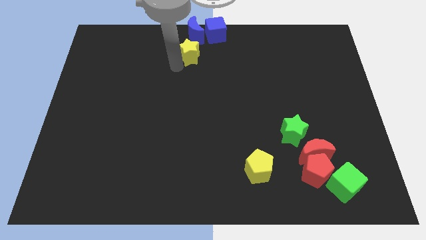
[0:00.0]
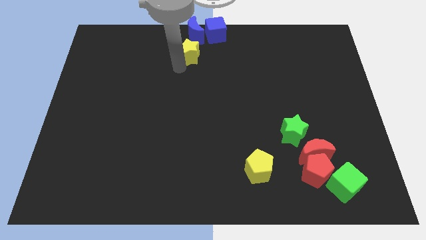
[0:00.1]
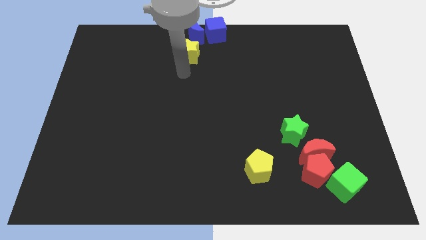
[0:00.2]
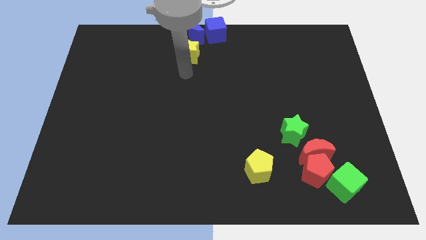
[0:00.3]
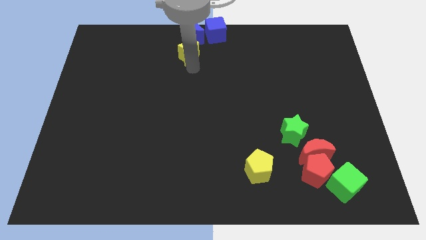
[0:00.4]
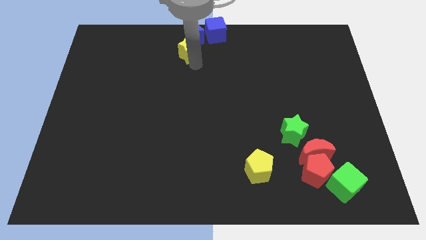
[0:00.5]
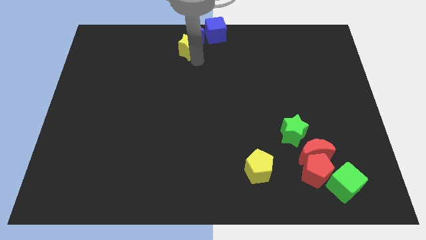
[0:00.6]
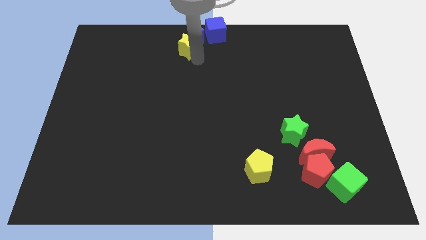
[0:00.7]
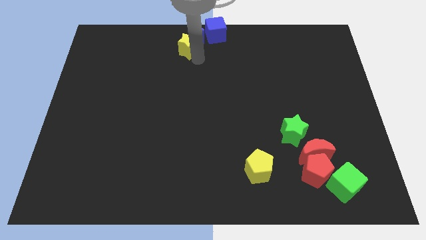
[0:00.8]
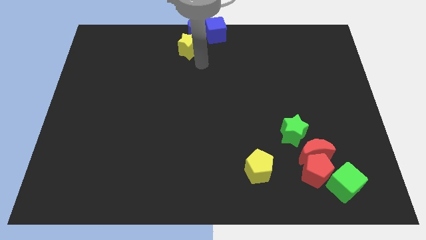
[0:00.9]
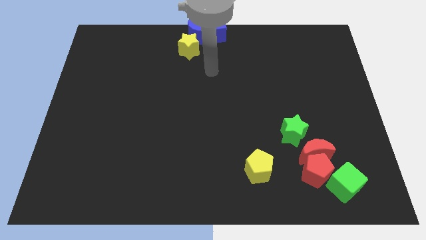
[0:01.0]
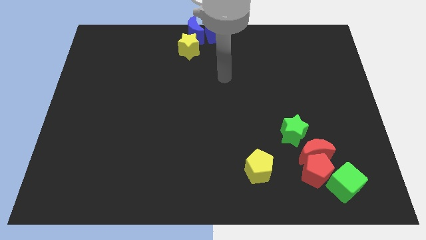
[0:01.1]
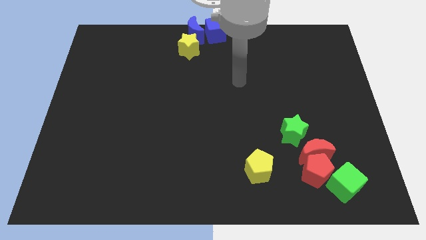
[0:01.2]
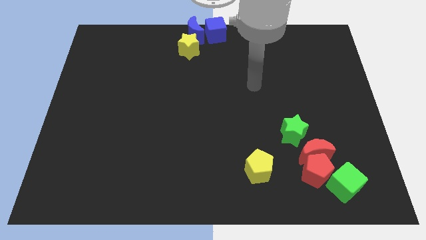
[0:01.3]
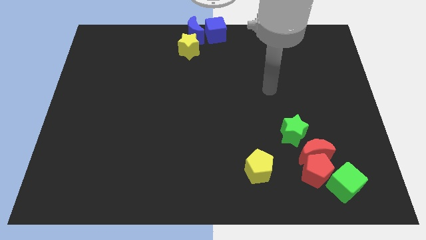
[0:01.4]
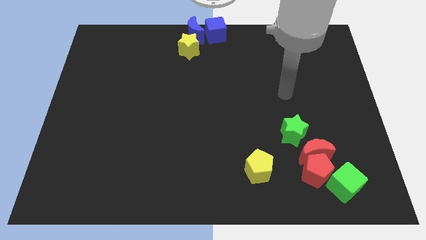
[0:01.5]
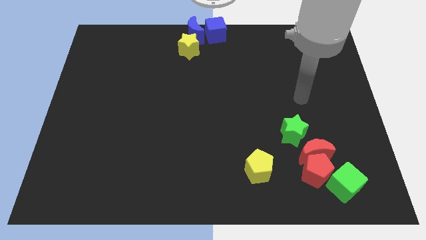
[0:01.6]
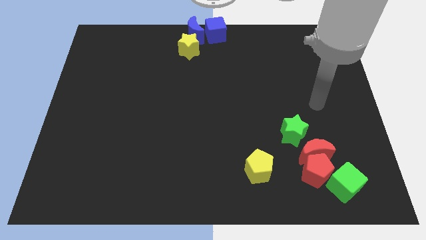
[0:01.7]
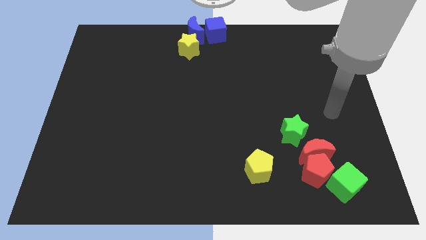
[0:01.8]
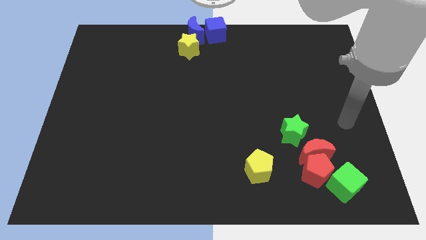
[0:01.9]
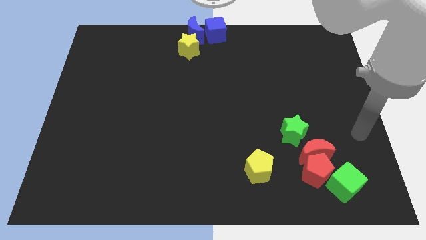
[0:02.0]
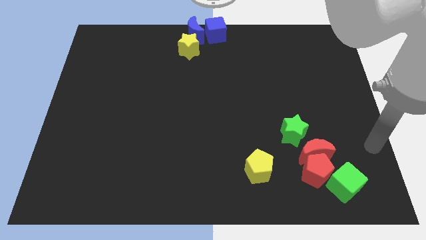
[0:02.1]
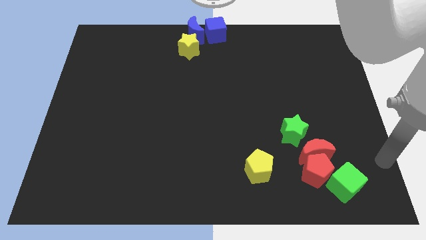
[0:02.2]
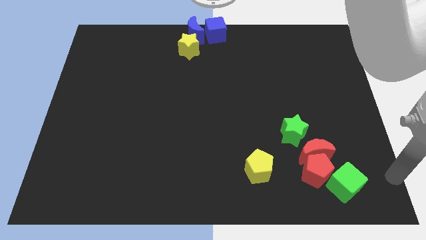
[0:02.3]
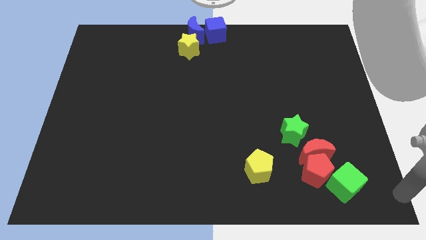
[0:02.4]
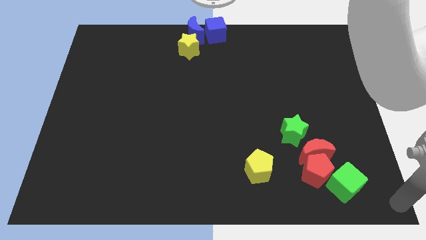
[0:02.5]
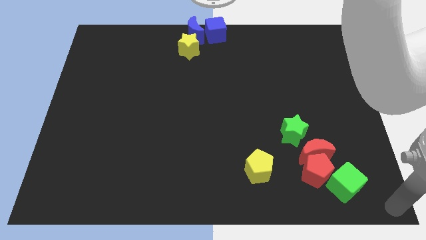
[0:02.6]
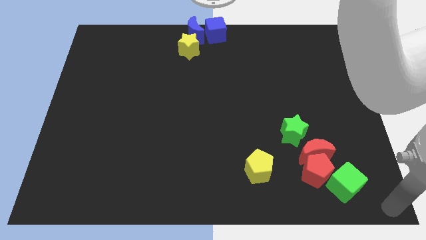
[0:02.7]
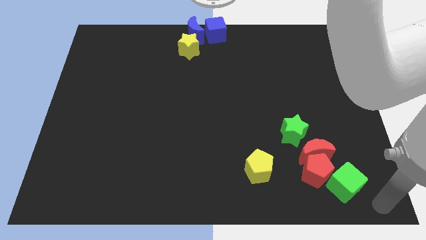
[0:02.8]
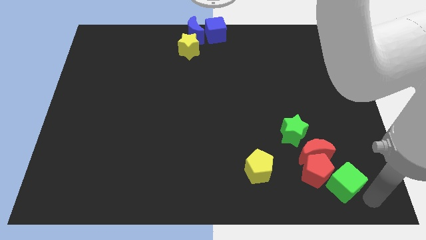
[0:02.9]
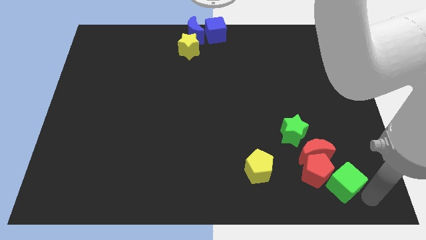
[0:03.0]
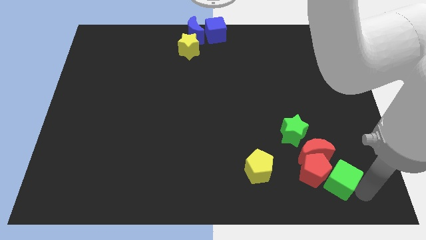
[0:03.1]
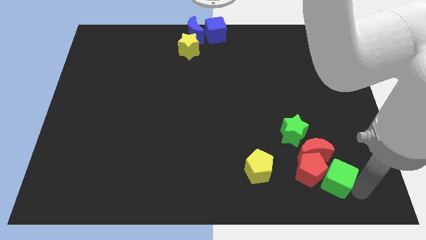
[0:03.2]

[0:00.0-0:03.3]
slightly push the green cube into the red pentagon

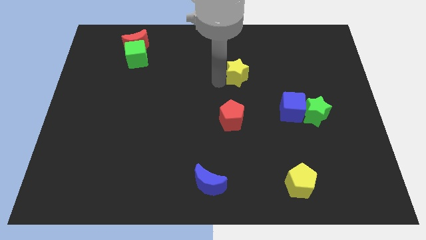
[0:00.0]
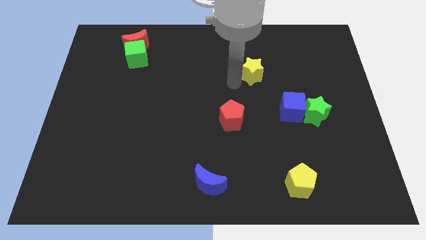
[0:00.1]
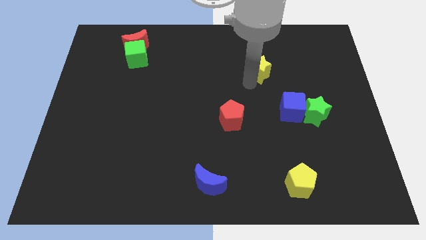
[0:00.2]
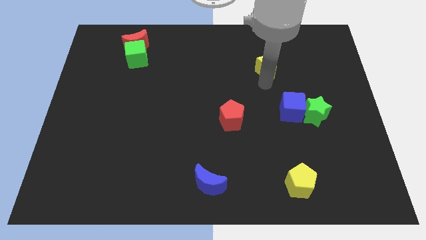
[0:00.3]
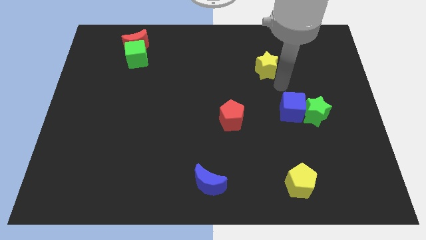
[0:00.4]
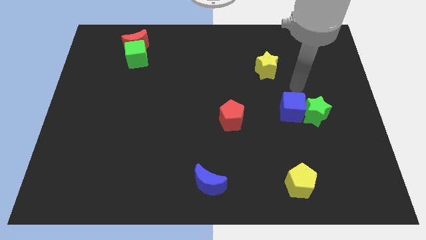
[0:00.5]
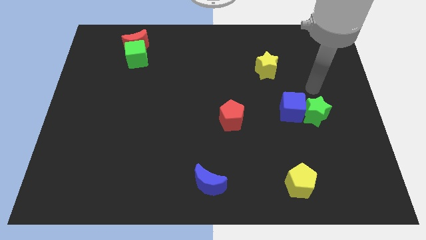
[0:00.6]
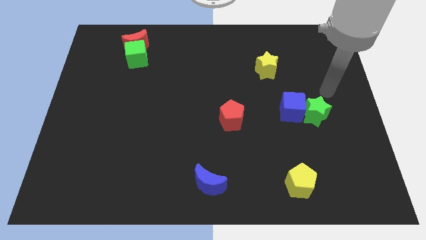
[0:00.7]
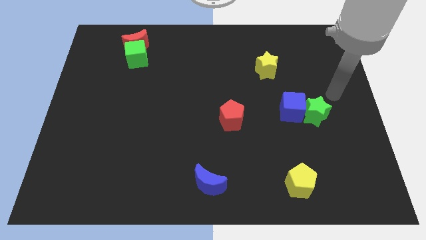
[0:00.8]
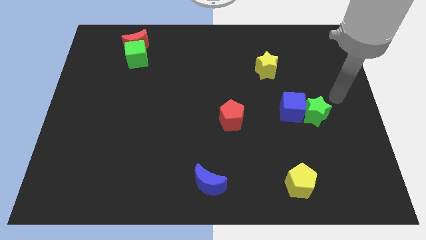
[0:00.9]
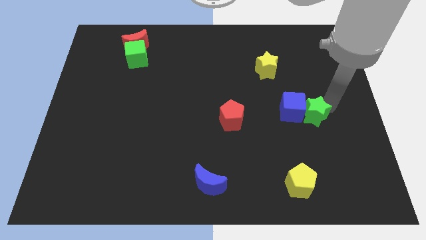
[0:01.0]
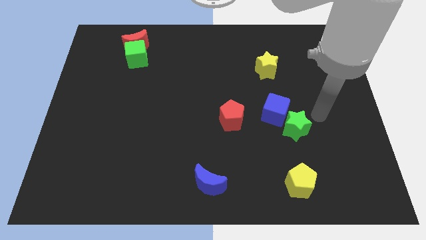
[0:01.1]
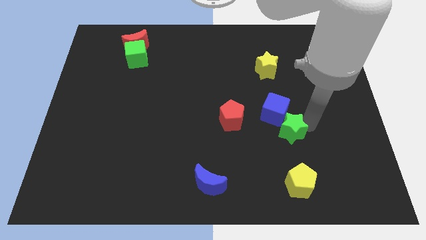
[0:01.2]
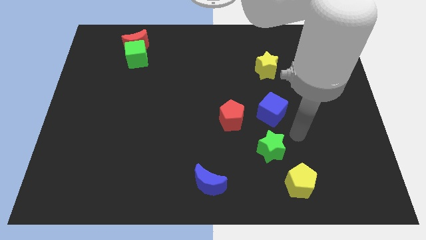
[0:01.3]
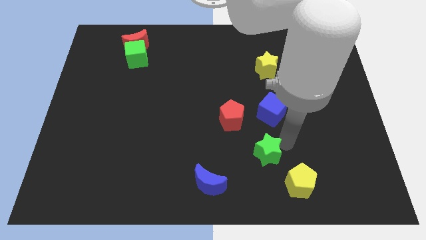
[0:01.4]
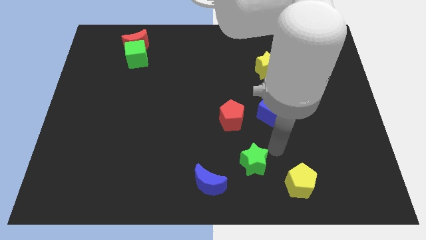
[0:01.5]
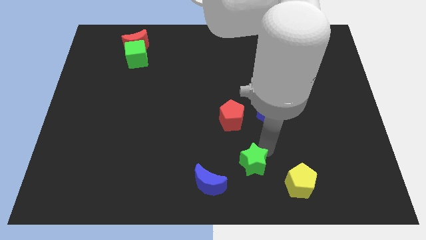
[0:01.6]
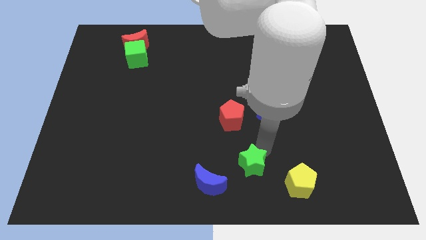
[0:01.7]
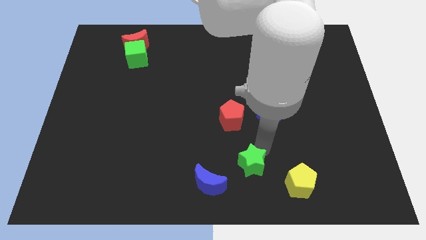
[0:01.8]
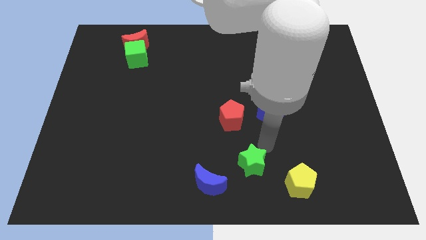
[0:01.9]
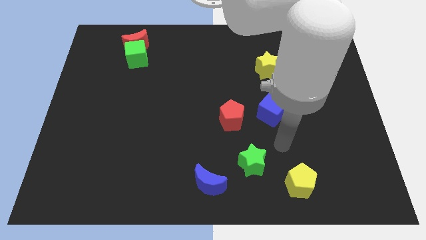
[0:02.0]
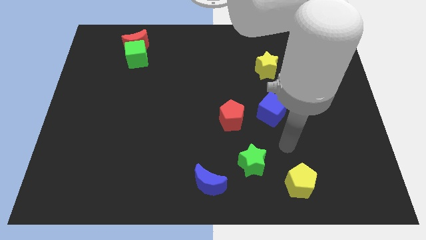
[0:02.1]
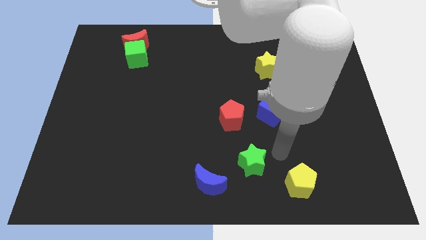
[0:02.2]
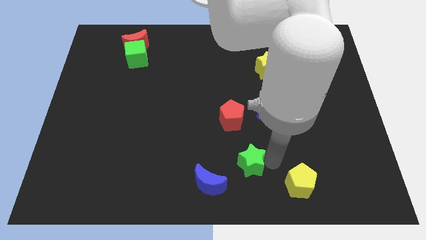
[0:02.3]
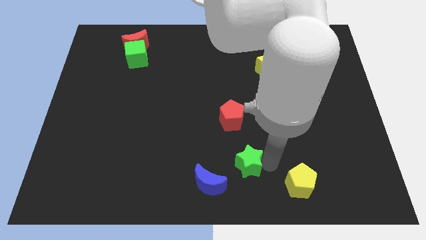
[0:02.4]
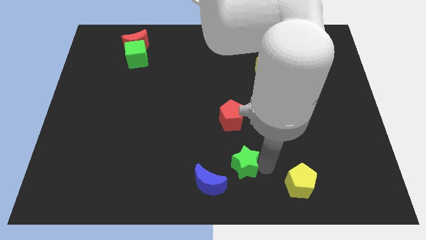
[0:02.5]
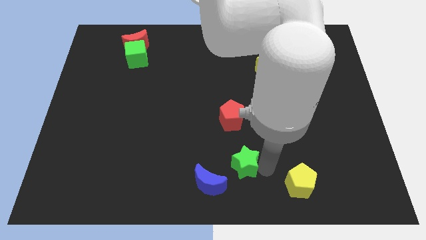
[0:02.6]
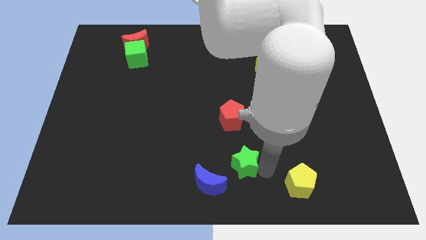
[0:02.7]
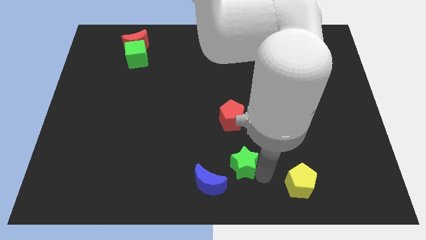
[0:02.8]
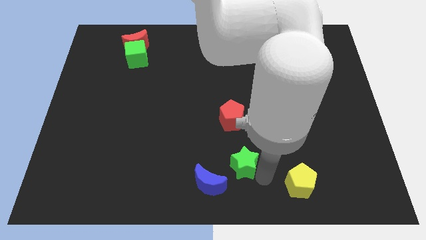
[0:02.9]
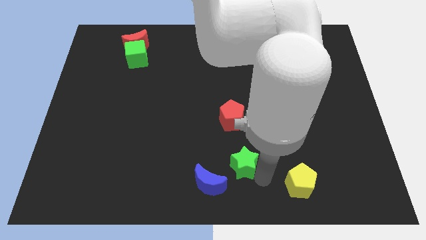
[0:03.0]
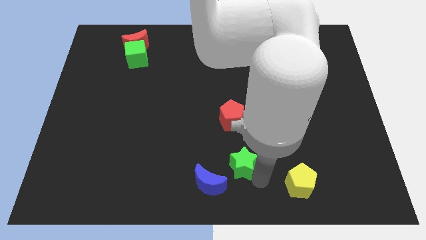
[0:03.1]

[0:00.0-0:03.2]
push the green star towards the blue crescent

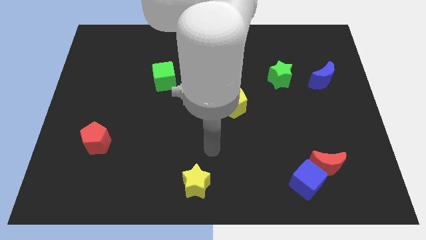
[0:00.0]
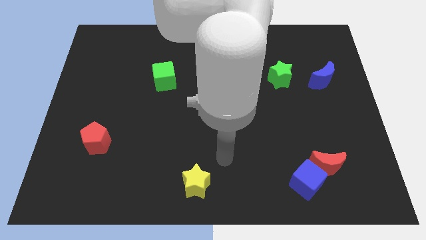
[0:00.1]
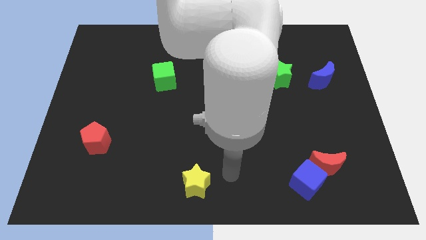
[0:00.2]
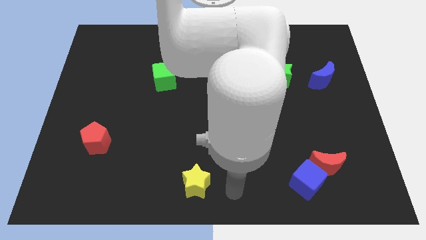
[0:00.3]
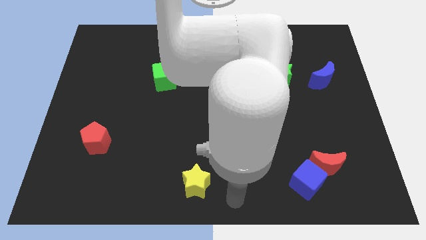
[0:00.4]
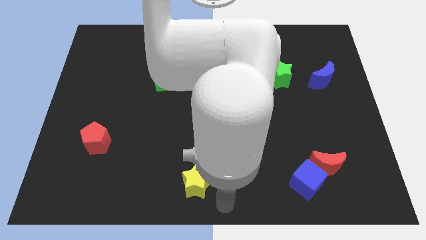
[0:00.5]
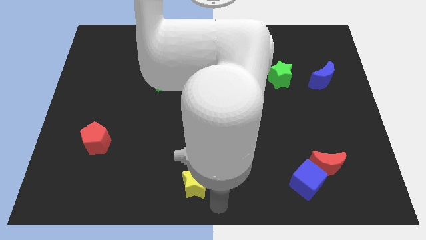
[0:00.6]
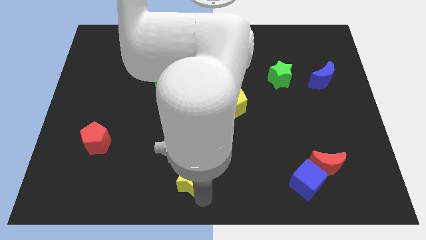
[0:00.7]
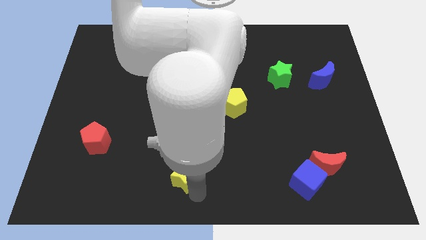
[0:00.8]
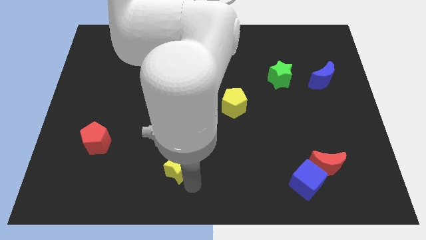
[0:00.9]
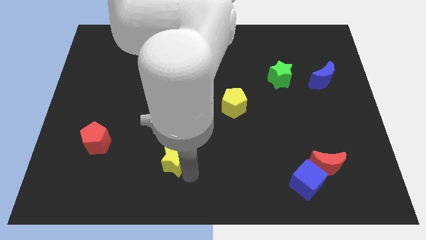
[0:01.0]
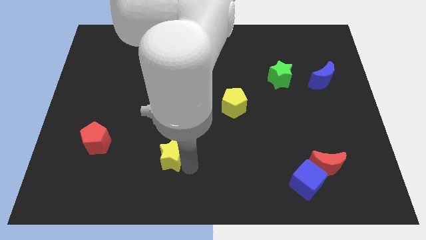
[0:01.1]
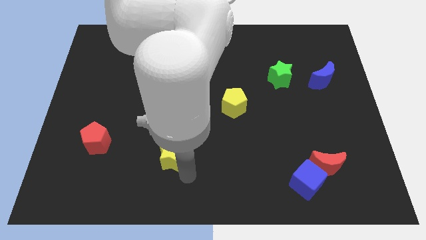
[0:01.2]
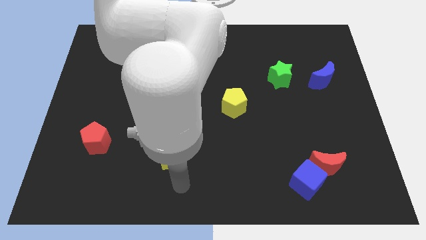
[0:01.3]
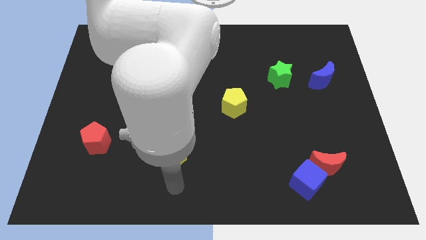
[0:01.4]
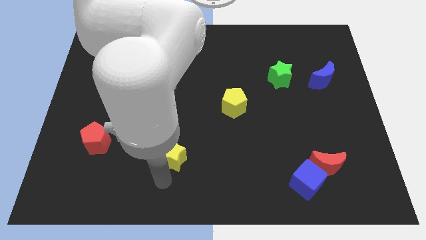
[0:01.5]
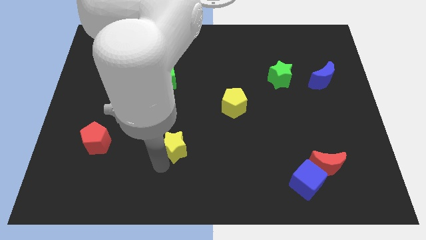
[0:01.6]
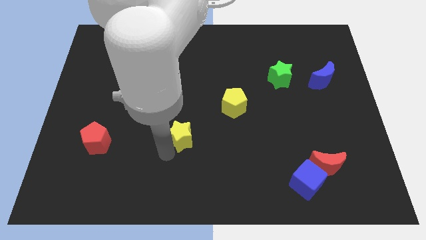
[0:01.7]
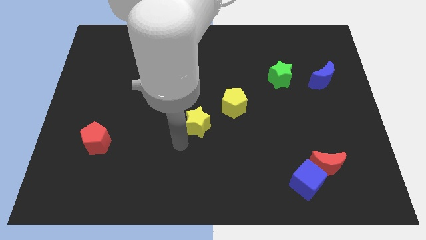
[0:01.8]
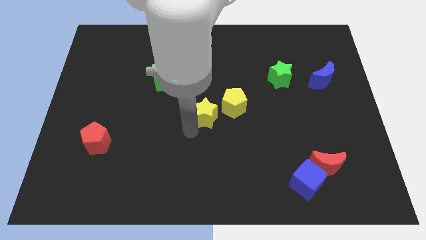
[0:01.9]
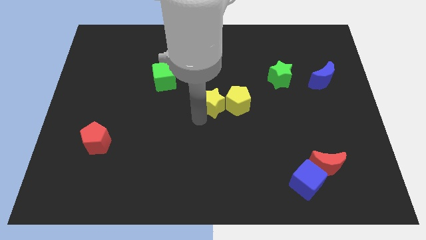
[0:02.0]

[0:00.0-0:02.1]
move the yellow star towards center of the board

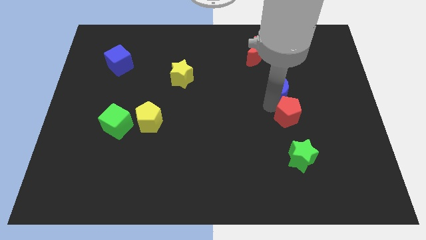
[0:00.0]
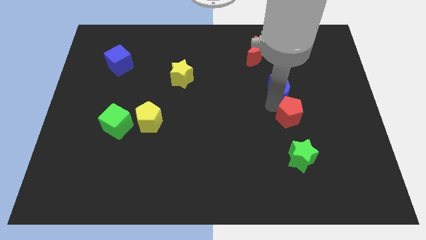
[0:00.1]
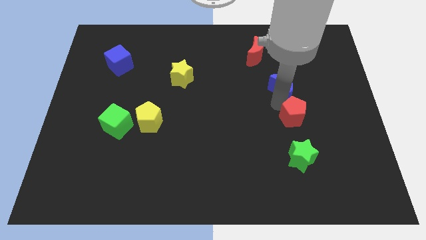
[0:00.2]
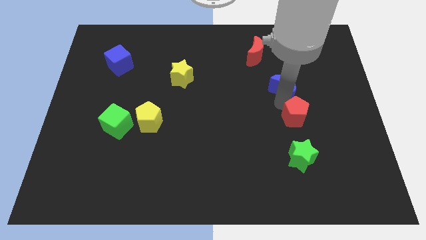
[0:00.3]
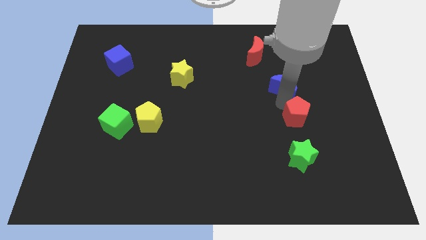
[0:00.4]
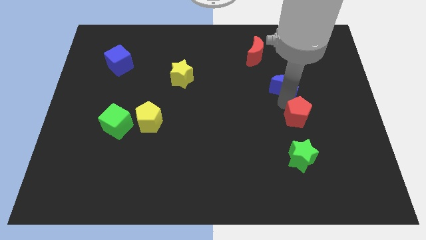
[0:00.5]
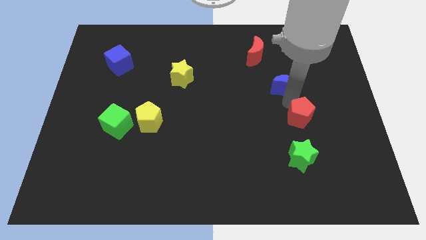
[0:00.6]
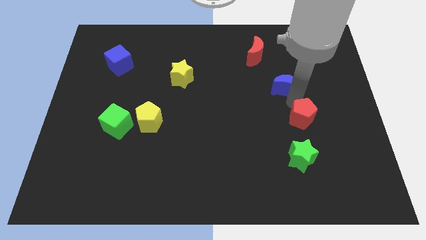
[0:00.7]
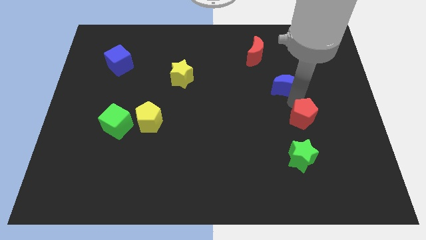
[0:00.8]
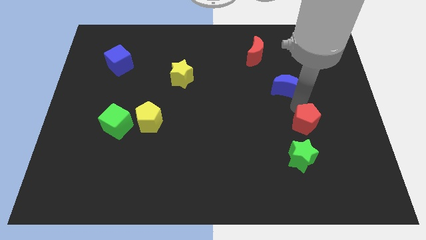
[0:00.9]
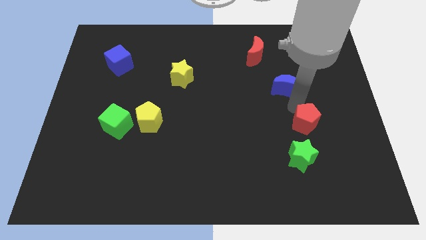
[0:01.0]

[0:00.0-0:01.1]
separate the red pentagon and blue crescent
